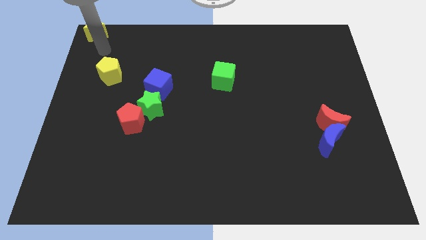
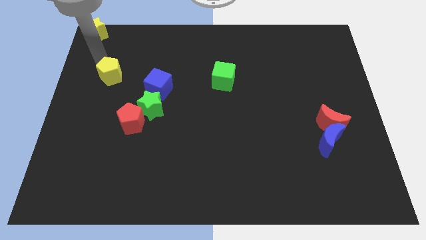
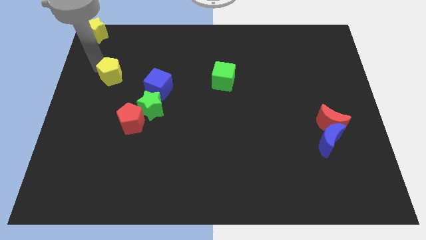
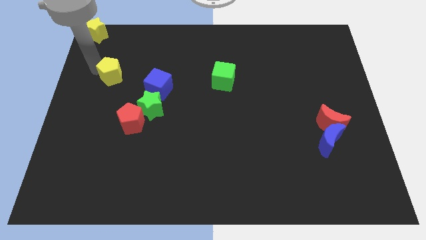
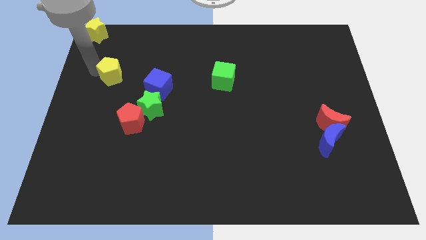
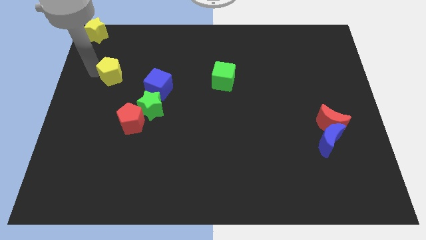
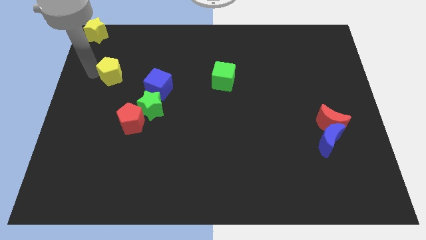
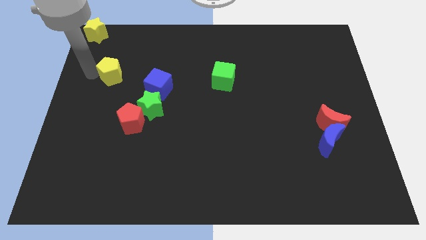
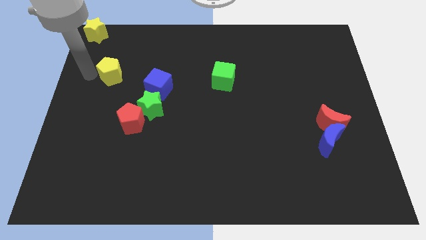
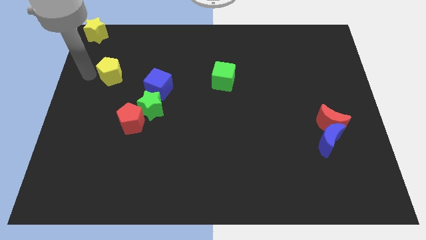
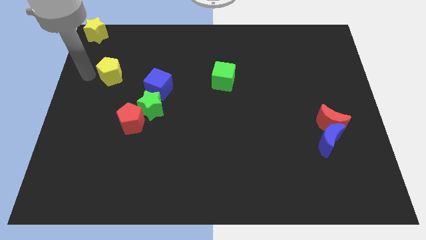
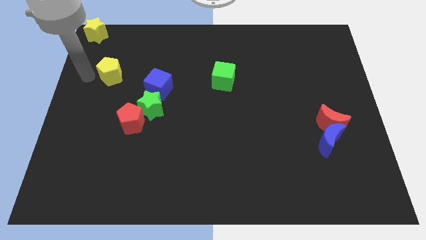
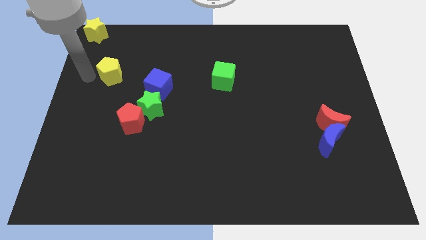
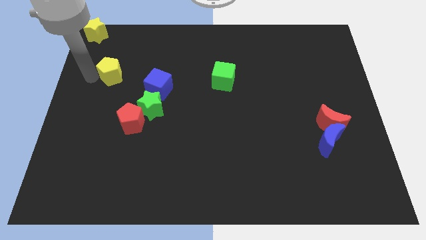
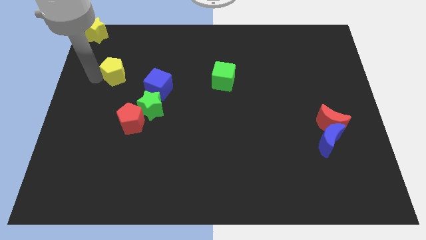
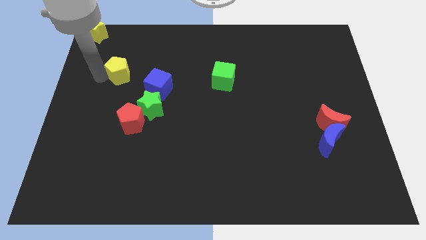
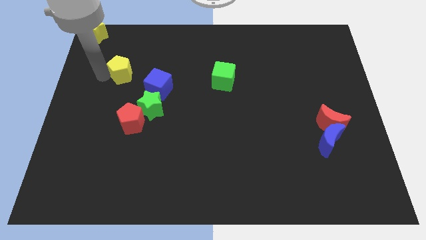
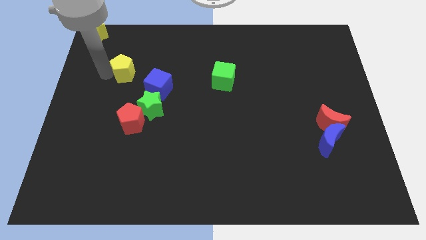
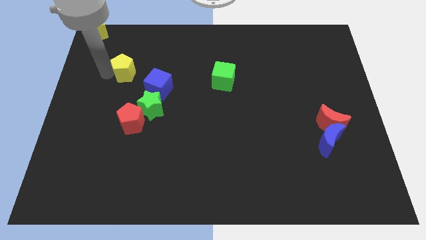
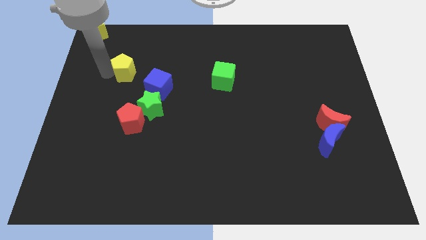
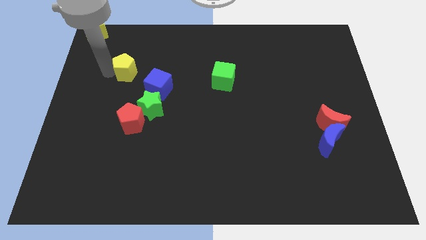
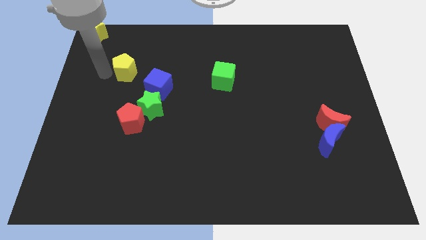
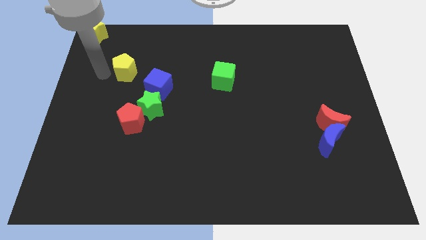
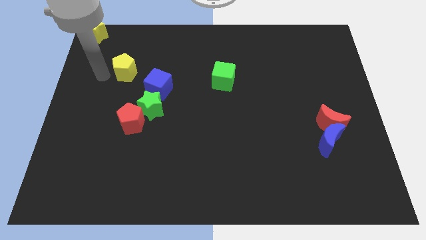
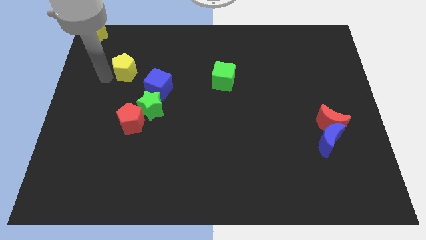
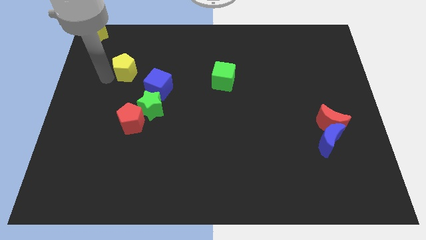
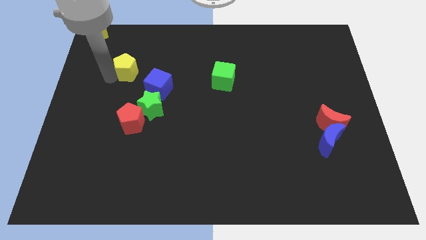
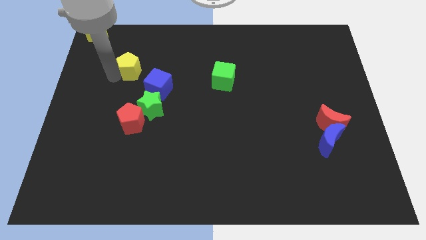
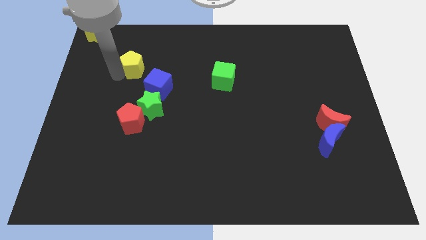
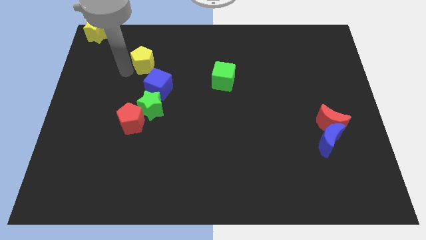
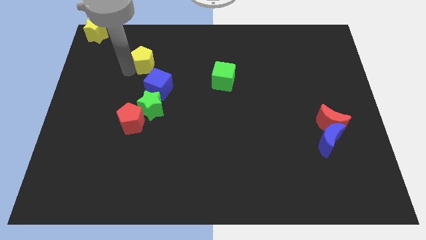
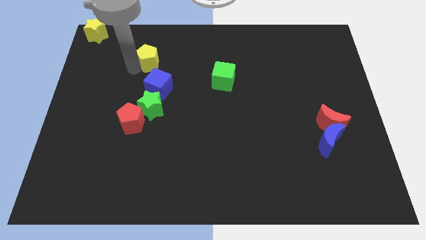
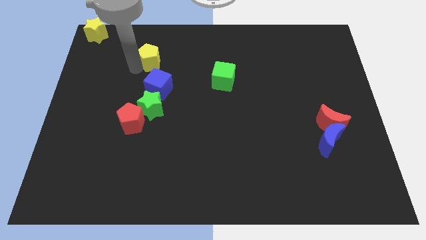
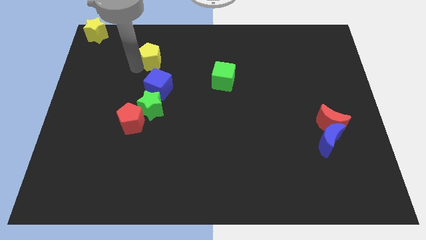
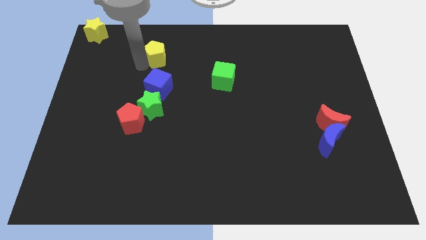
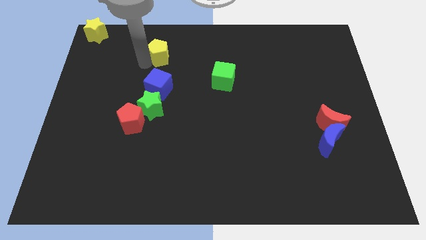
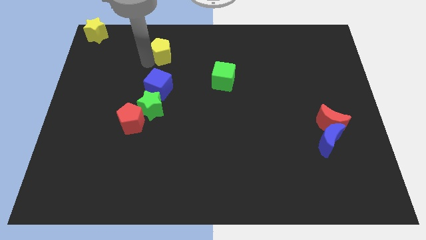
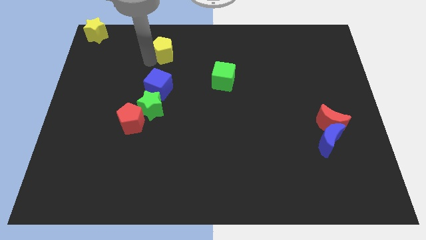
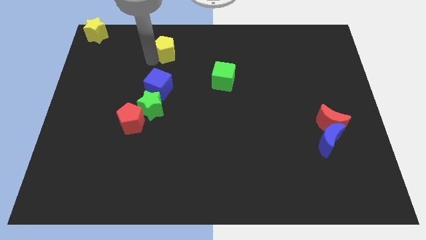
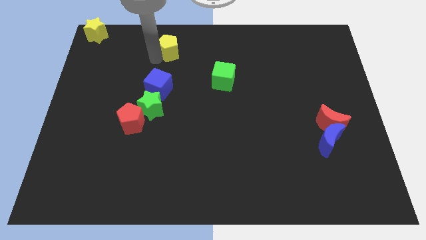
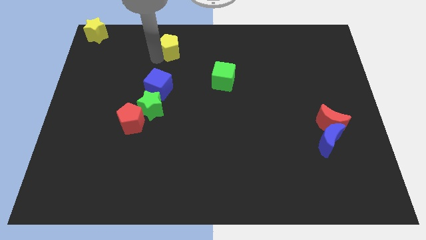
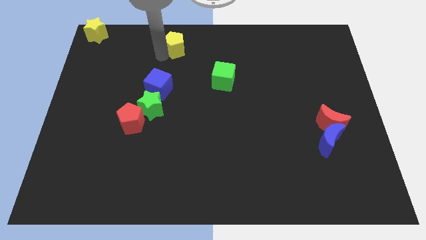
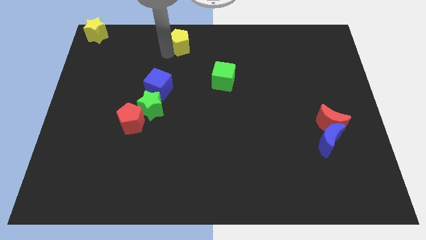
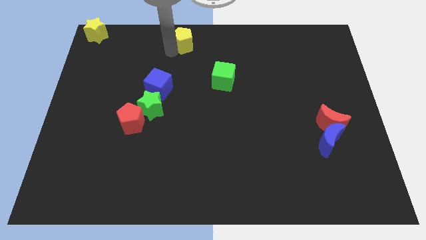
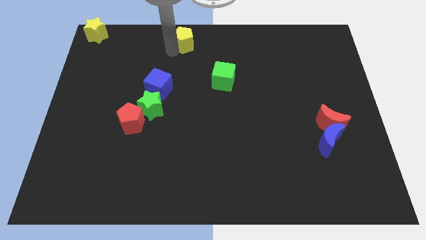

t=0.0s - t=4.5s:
place the yellow pentagon diagonally to green cube

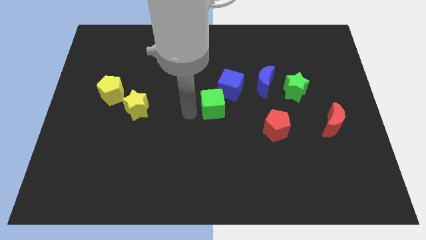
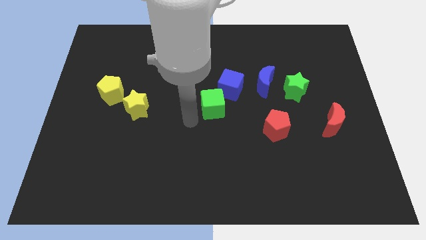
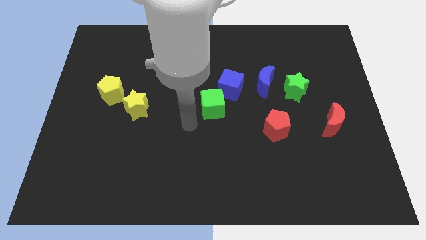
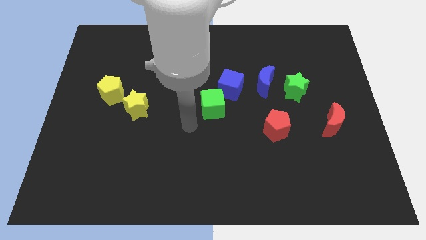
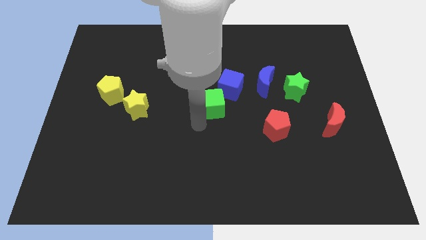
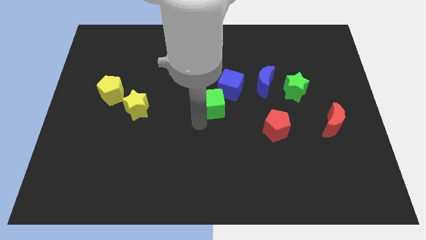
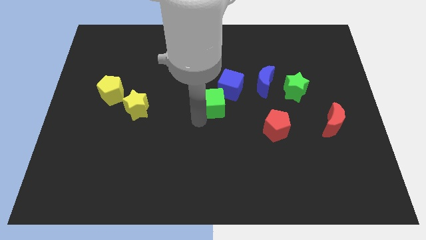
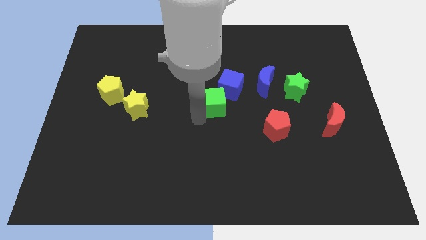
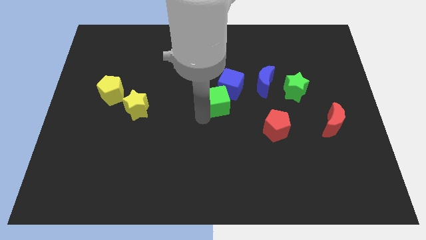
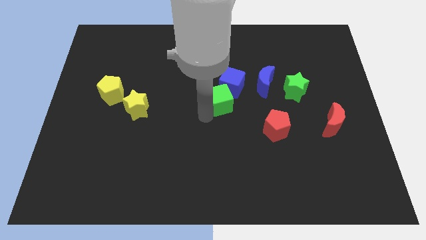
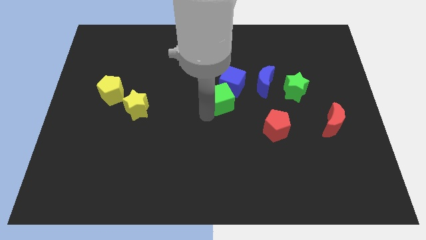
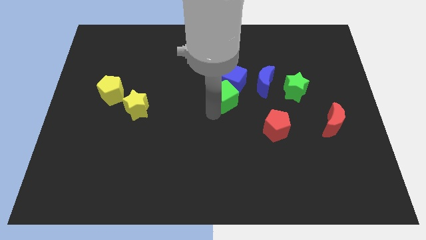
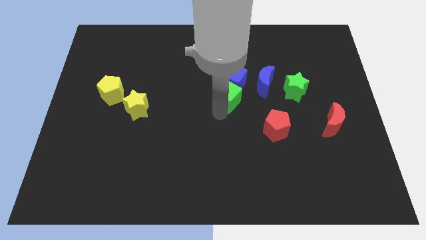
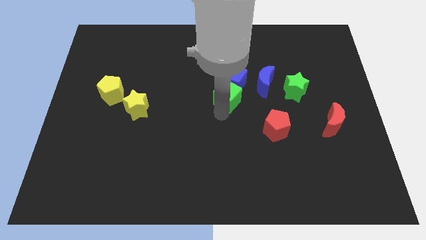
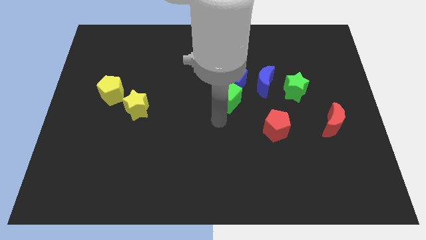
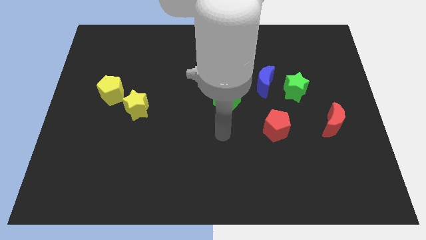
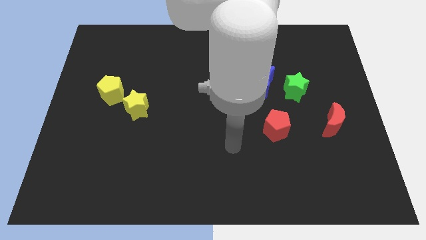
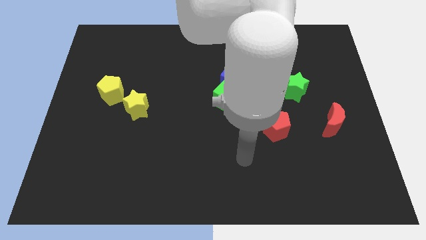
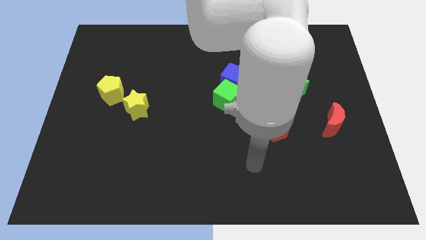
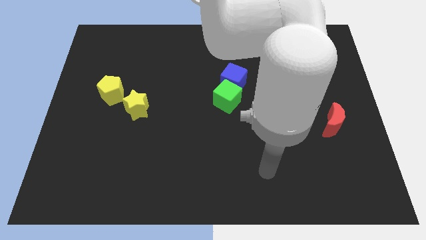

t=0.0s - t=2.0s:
push the green cube into the blue cube

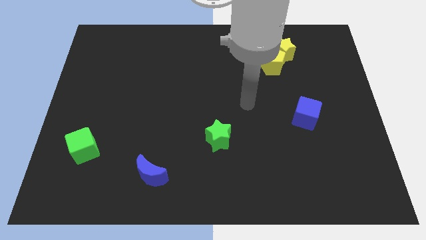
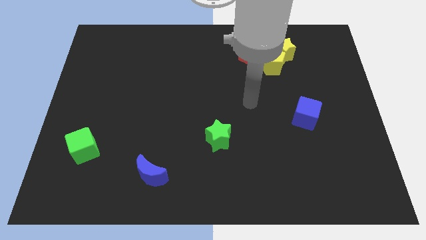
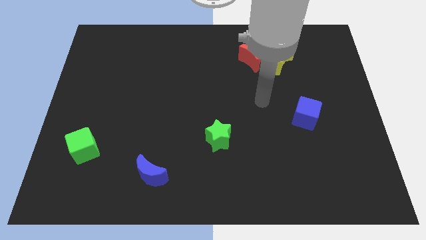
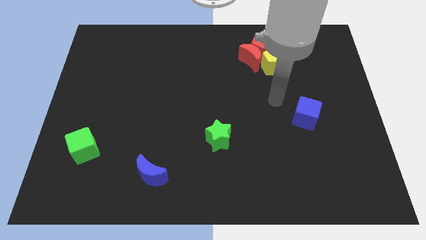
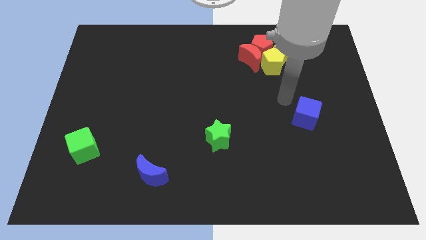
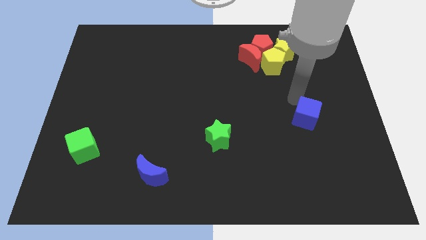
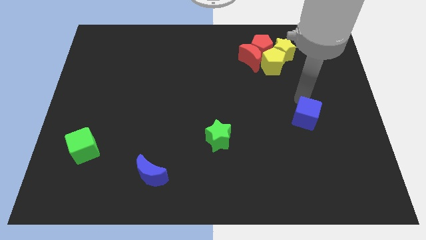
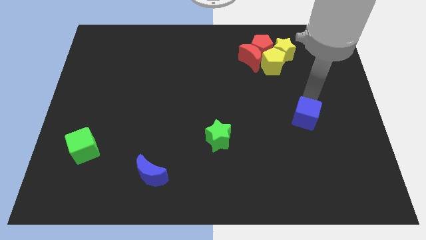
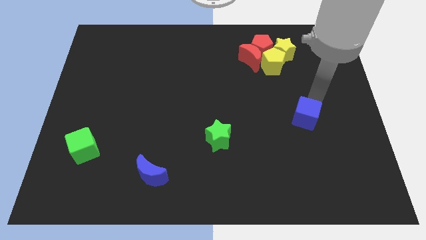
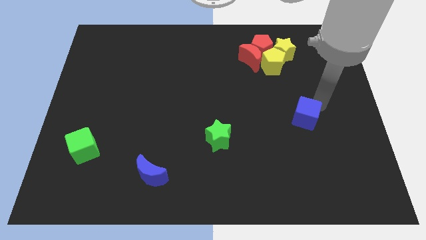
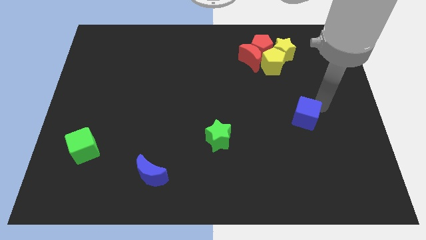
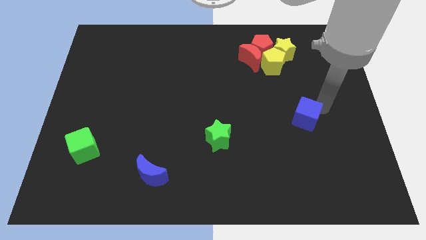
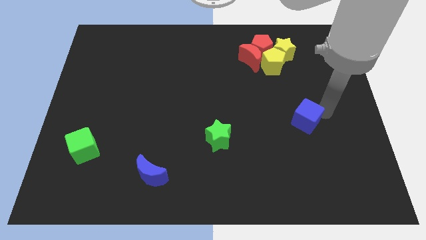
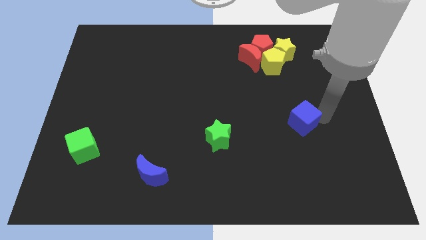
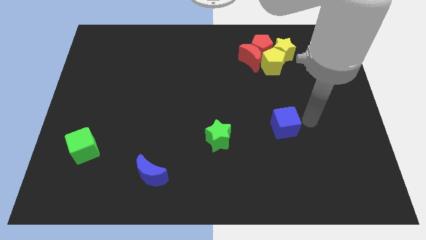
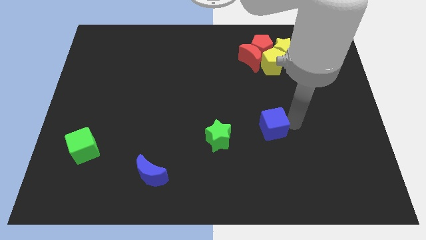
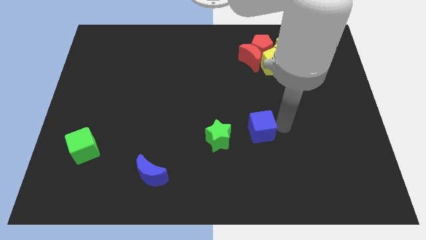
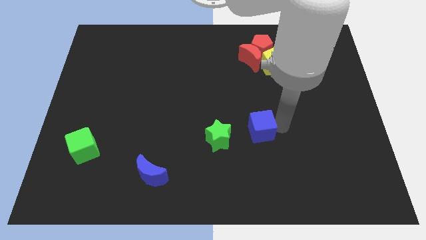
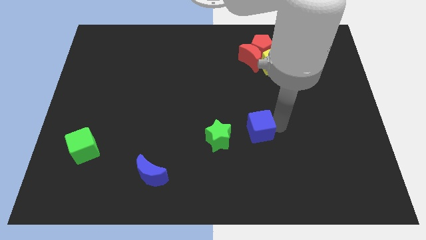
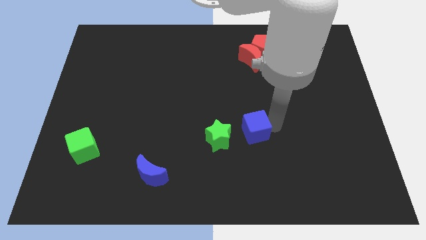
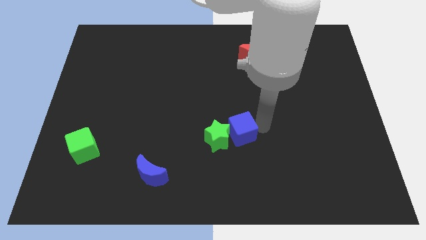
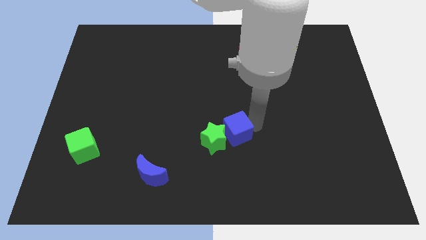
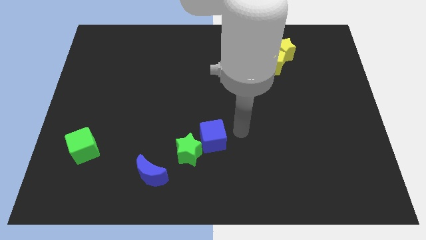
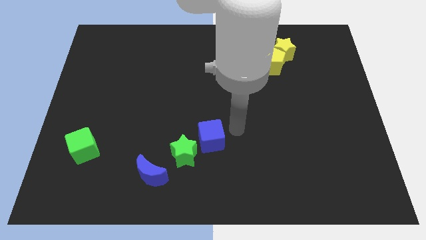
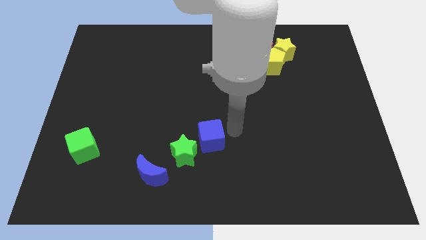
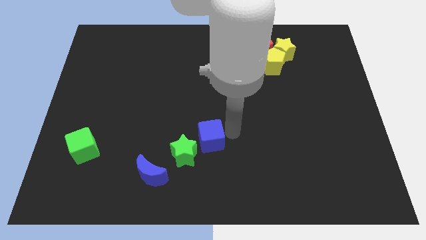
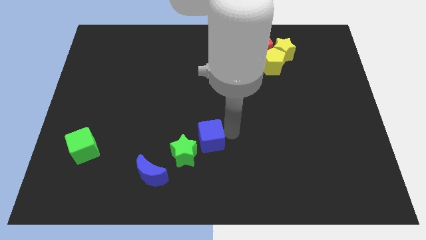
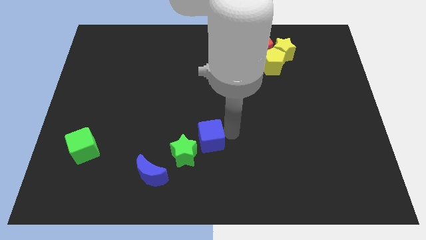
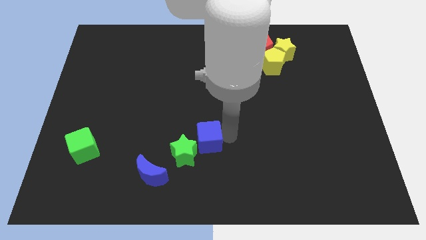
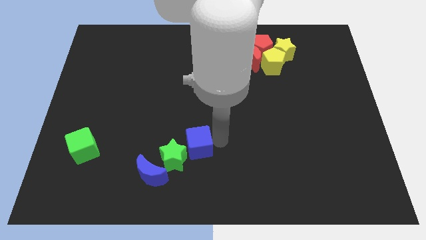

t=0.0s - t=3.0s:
push the blue cube into the green star
